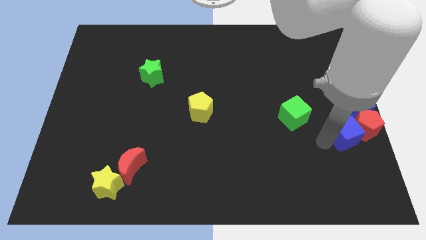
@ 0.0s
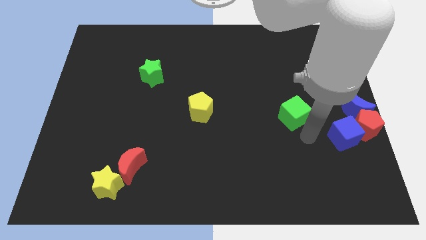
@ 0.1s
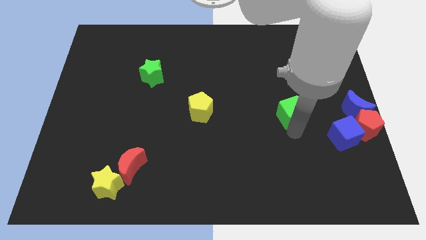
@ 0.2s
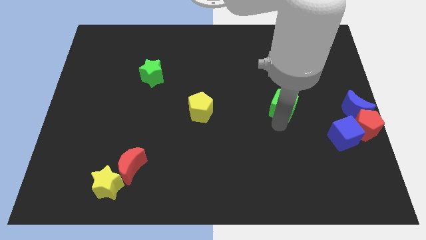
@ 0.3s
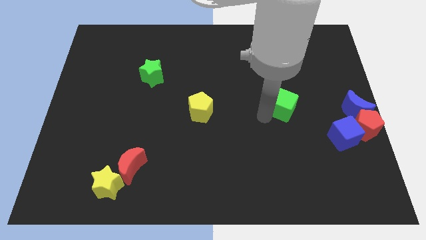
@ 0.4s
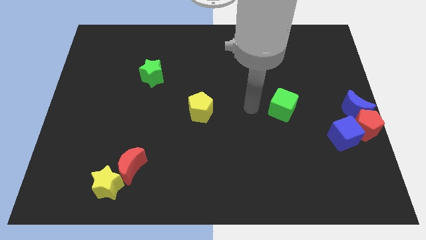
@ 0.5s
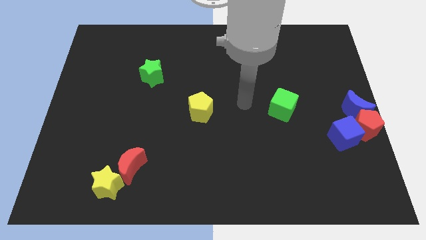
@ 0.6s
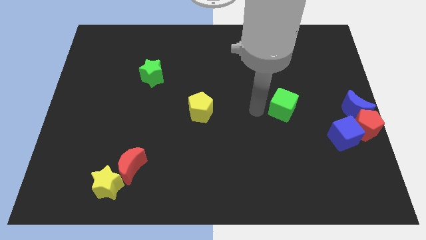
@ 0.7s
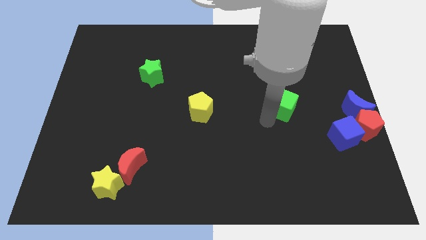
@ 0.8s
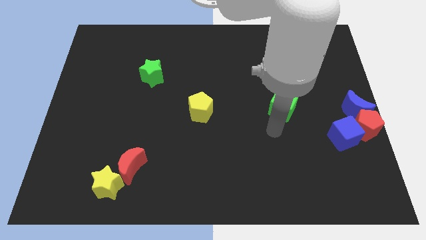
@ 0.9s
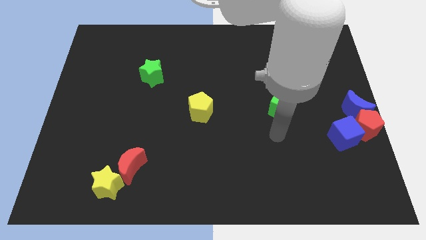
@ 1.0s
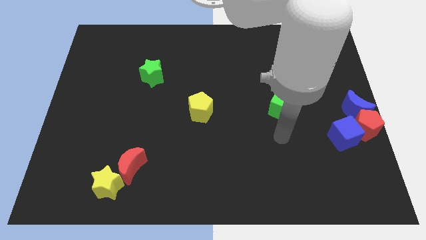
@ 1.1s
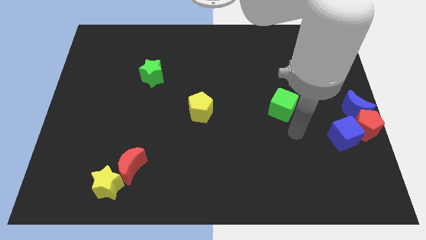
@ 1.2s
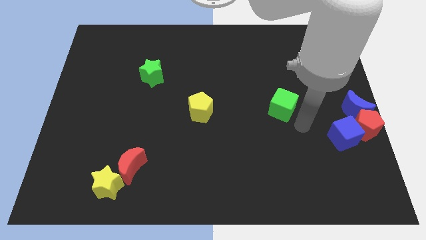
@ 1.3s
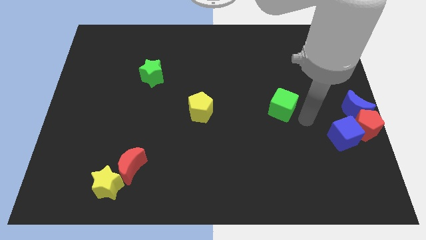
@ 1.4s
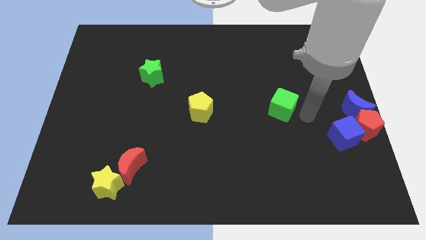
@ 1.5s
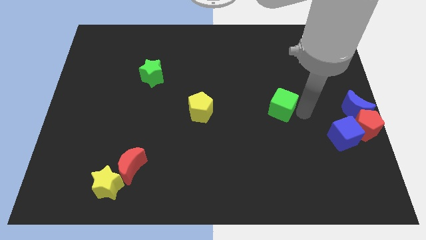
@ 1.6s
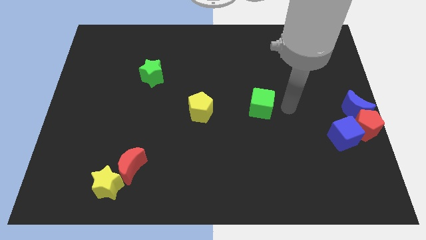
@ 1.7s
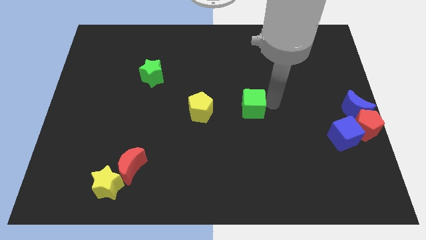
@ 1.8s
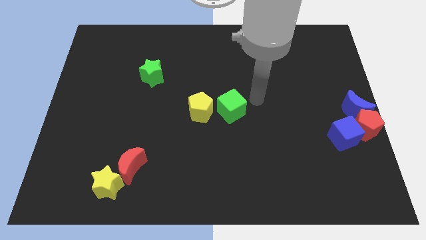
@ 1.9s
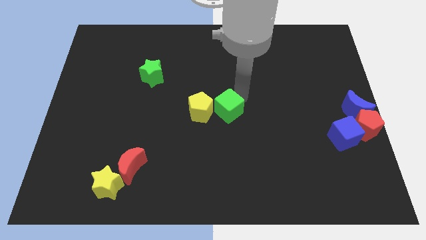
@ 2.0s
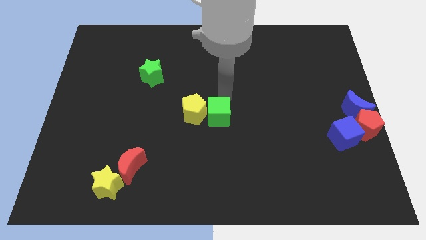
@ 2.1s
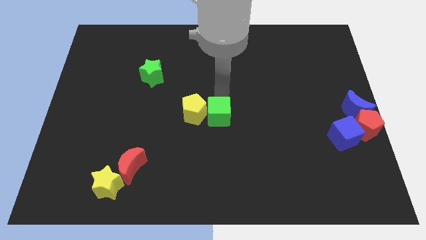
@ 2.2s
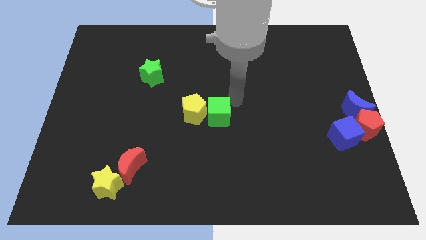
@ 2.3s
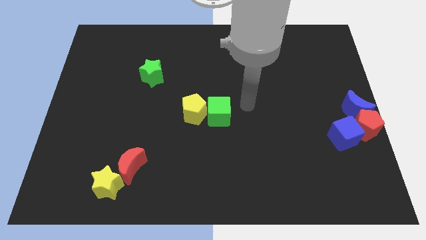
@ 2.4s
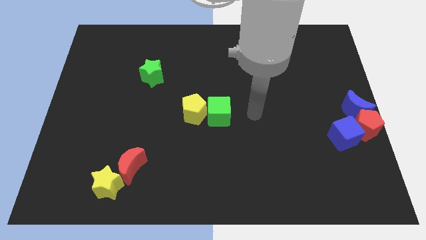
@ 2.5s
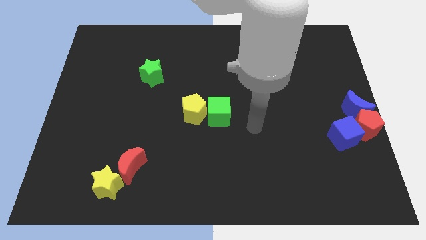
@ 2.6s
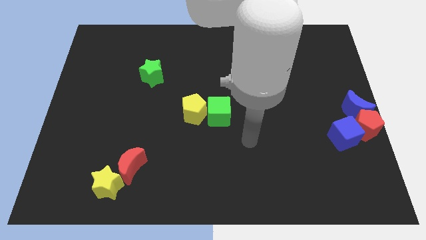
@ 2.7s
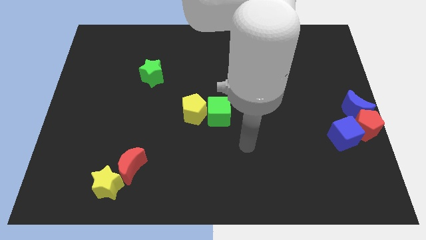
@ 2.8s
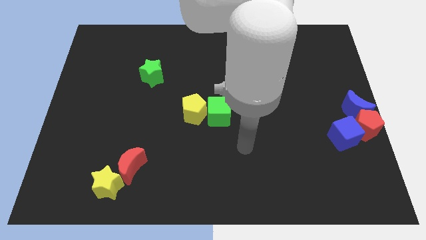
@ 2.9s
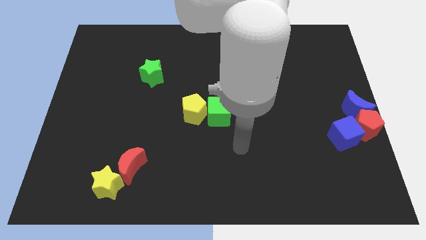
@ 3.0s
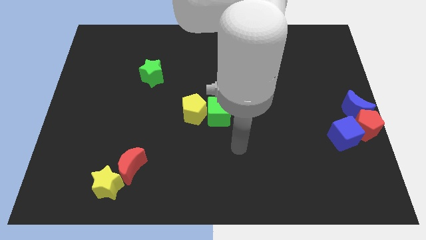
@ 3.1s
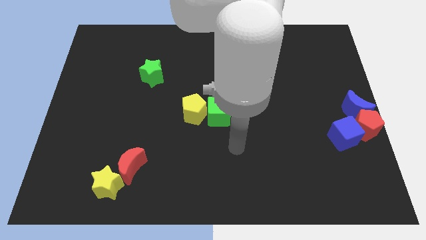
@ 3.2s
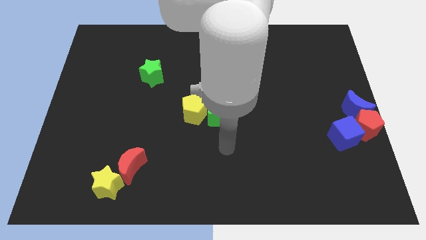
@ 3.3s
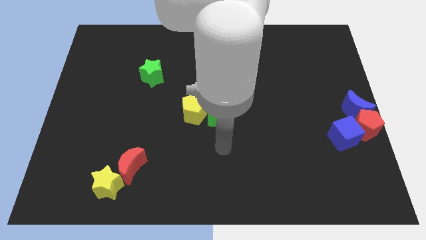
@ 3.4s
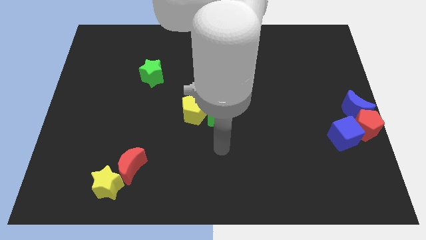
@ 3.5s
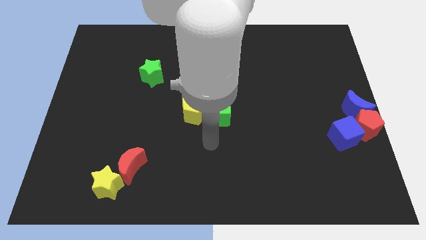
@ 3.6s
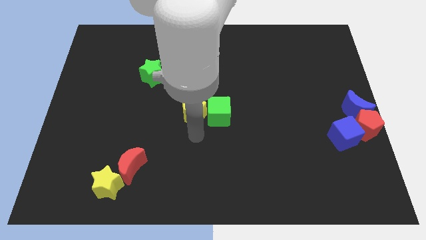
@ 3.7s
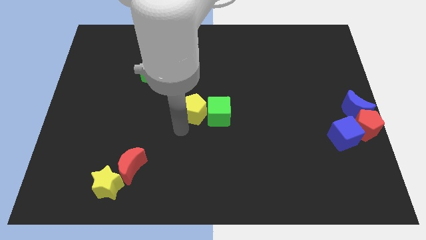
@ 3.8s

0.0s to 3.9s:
place the green cube to the right of the yellow pentagon

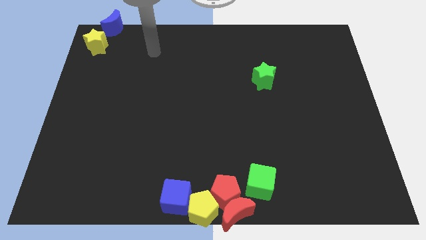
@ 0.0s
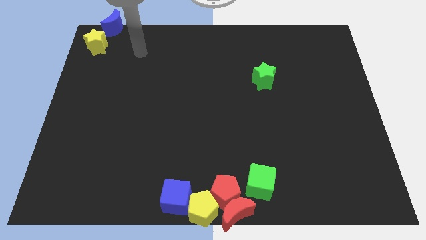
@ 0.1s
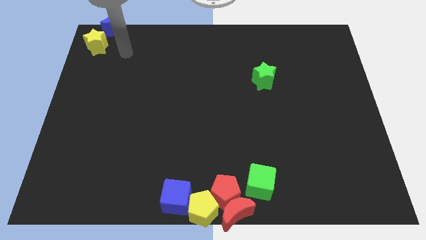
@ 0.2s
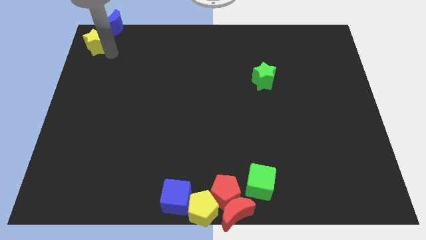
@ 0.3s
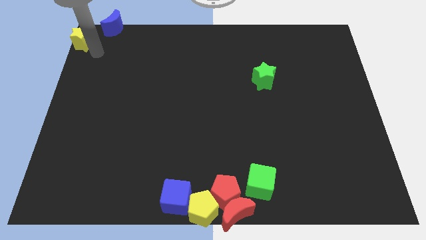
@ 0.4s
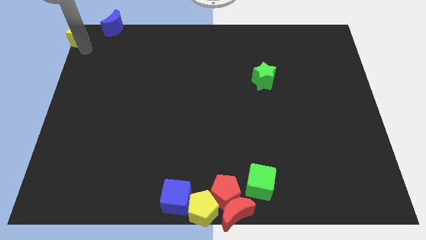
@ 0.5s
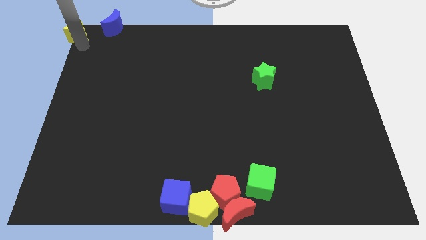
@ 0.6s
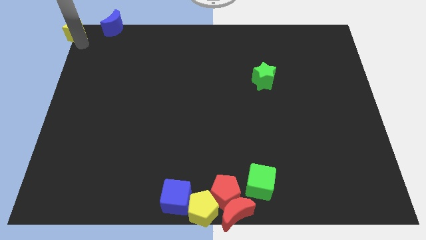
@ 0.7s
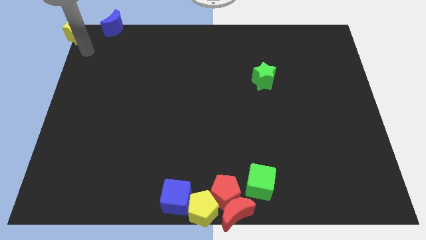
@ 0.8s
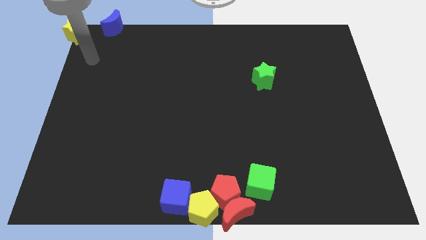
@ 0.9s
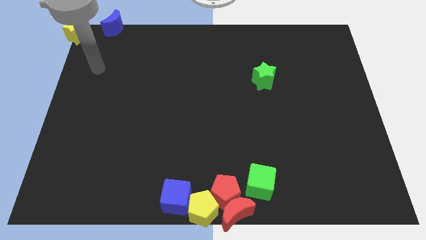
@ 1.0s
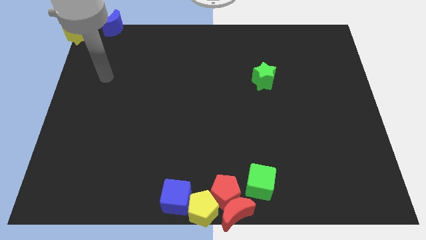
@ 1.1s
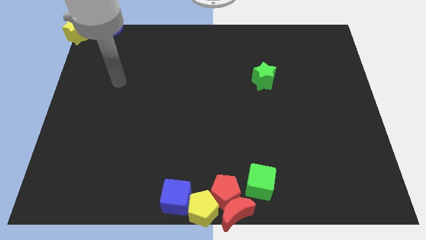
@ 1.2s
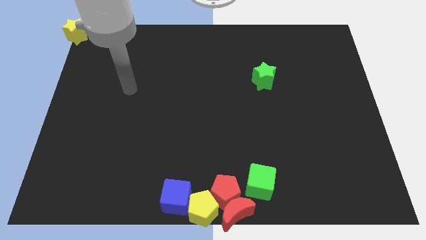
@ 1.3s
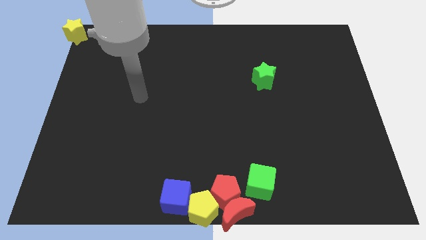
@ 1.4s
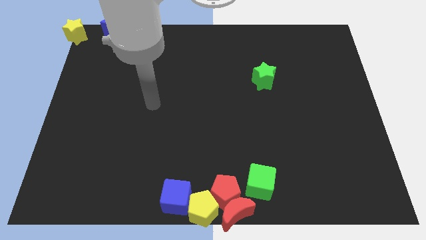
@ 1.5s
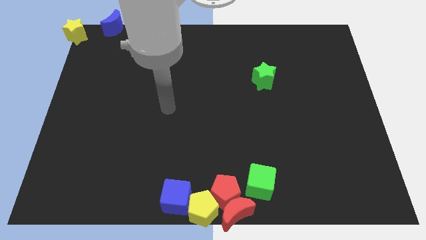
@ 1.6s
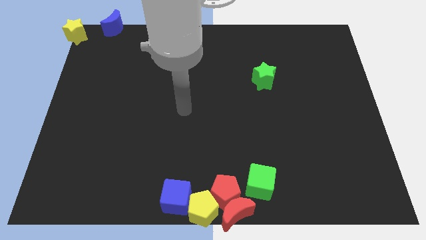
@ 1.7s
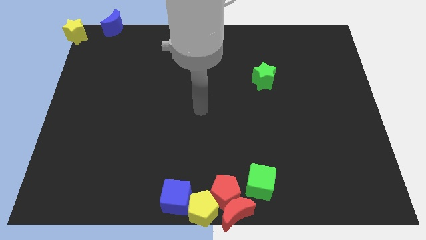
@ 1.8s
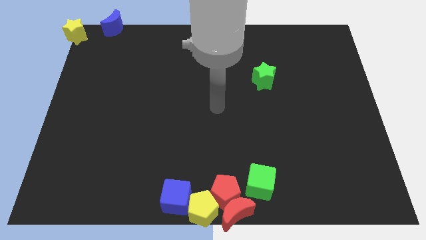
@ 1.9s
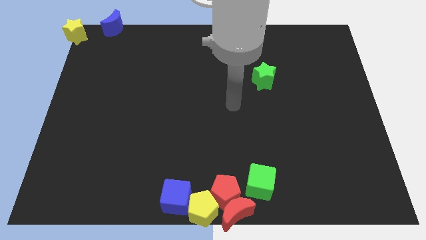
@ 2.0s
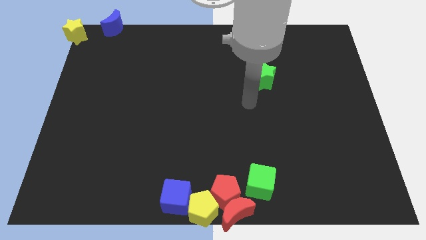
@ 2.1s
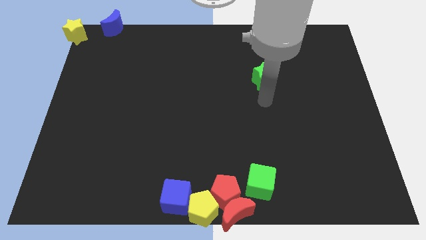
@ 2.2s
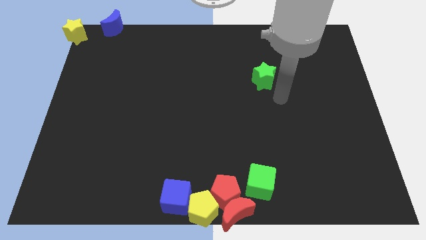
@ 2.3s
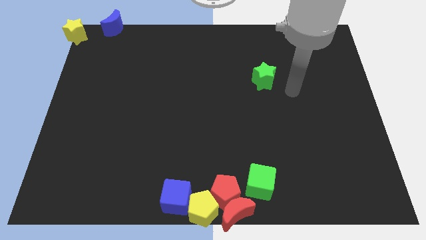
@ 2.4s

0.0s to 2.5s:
go away from the yellow star

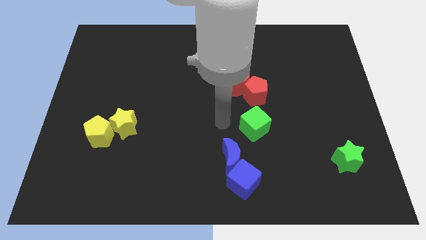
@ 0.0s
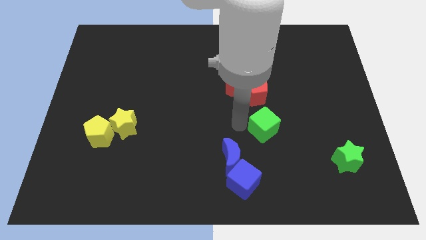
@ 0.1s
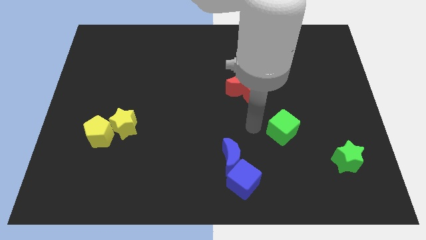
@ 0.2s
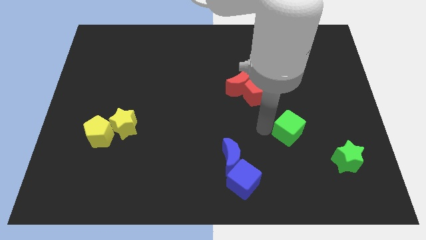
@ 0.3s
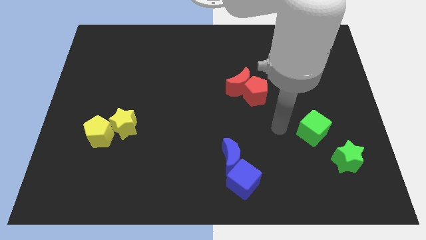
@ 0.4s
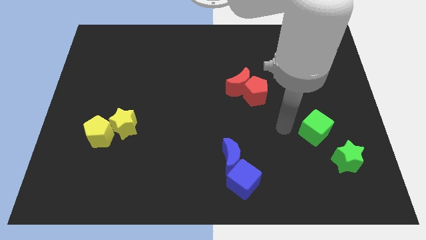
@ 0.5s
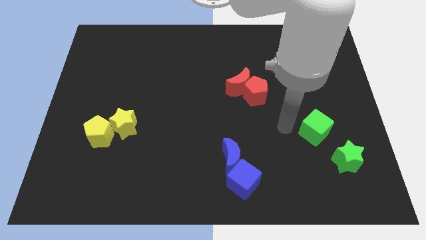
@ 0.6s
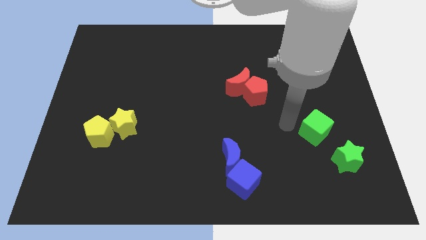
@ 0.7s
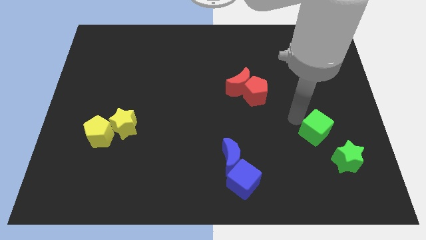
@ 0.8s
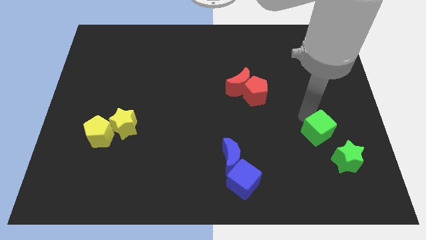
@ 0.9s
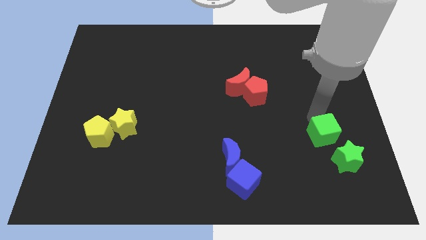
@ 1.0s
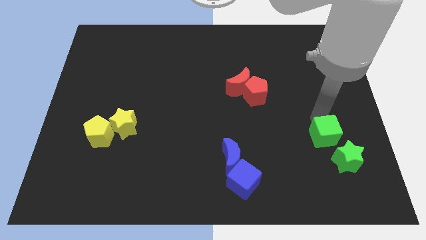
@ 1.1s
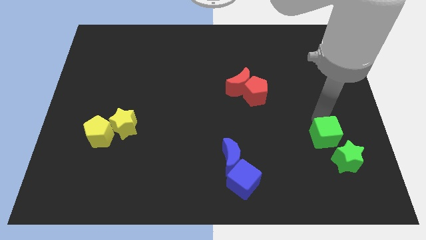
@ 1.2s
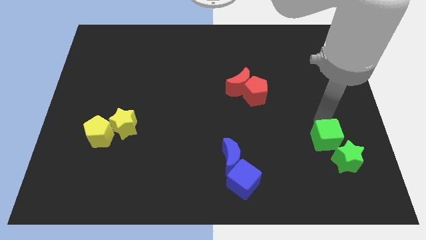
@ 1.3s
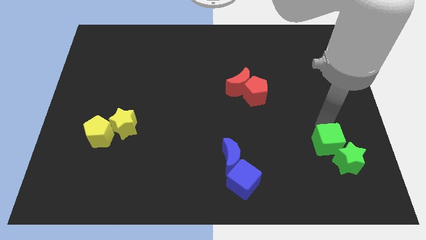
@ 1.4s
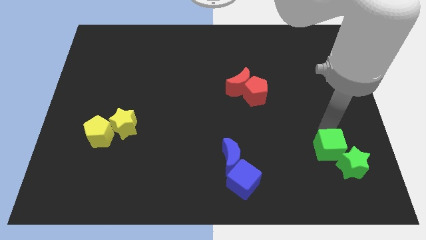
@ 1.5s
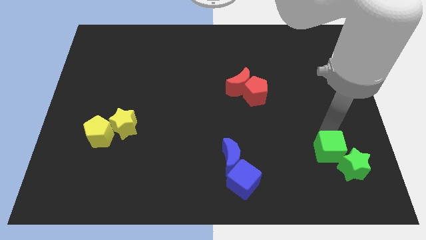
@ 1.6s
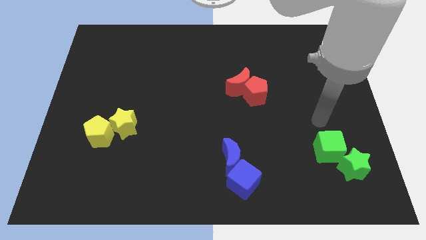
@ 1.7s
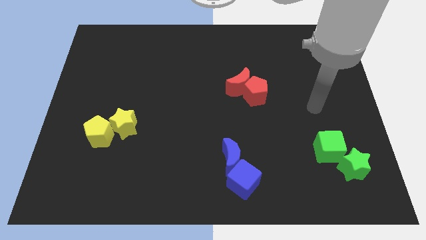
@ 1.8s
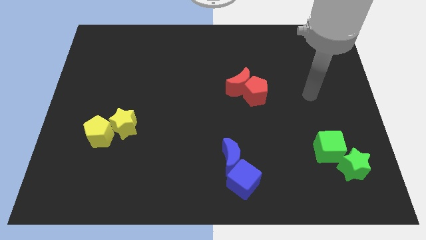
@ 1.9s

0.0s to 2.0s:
put the green cube above into the green star

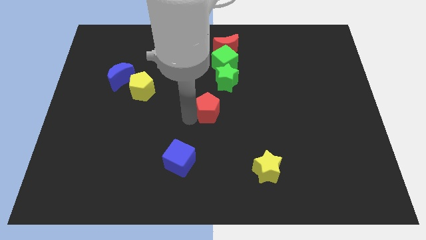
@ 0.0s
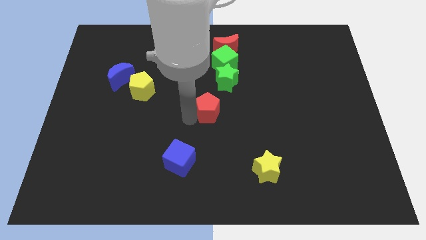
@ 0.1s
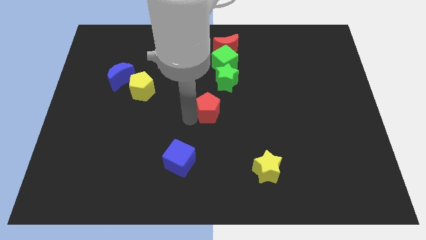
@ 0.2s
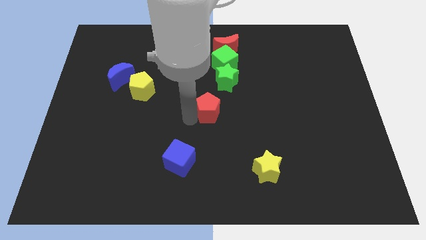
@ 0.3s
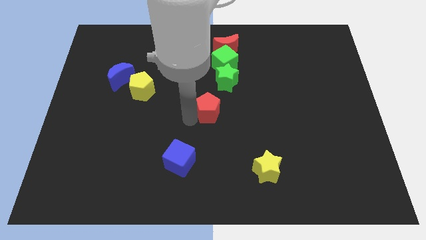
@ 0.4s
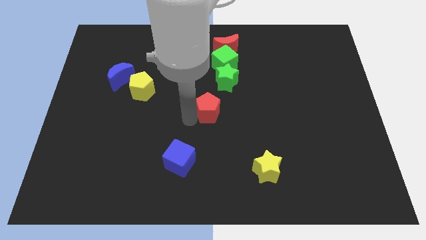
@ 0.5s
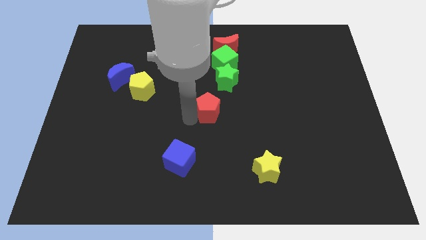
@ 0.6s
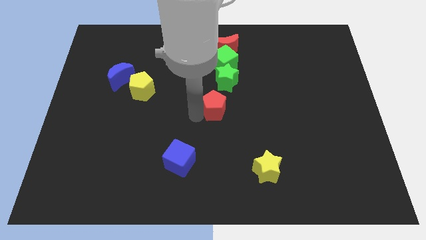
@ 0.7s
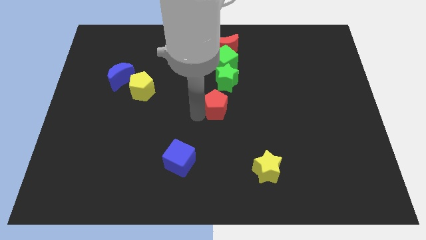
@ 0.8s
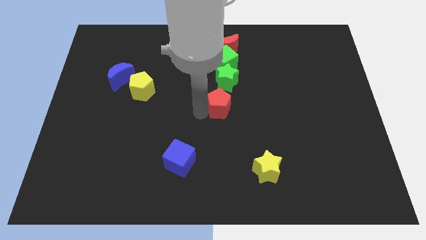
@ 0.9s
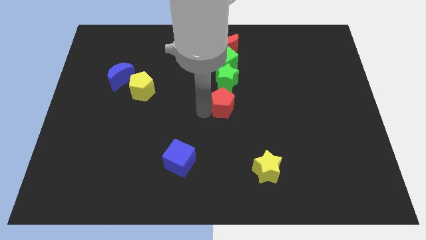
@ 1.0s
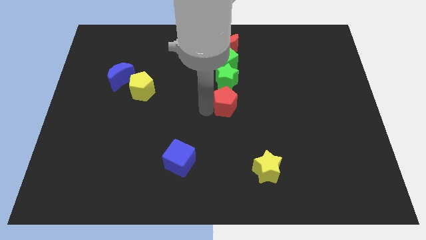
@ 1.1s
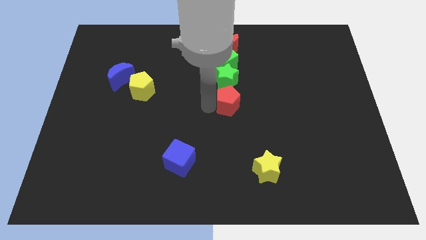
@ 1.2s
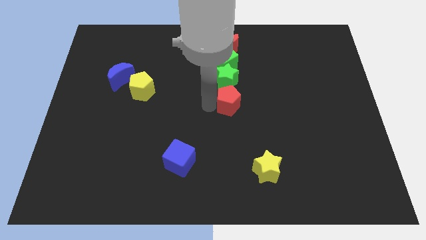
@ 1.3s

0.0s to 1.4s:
place the red pentagon to the bottom of the green star
